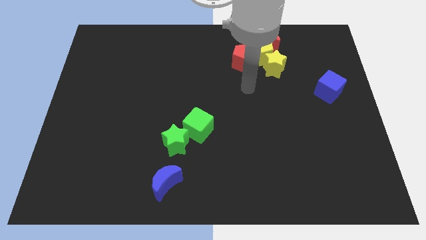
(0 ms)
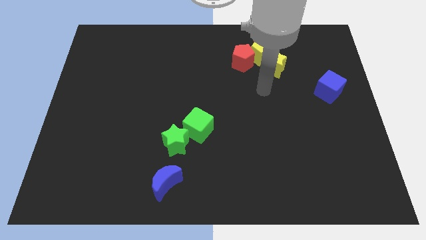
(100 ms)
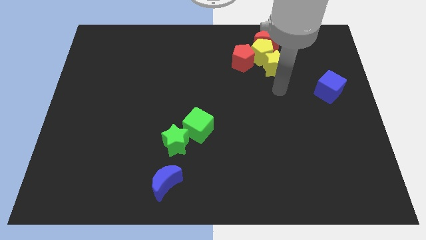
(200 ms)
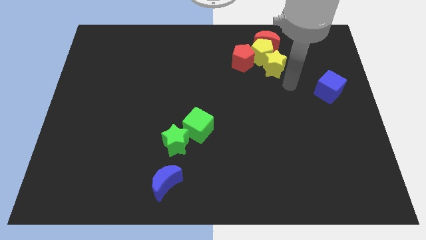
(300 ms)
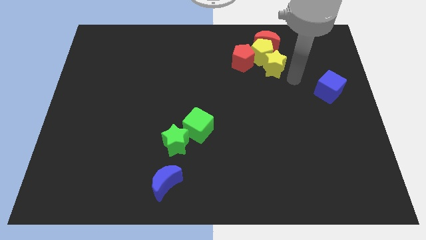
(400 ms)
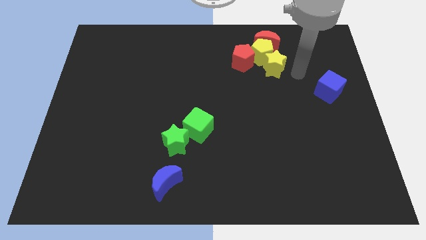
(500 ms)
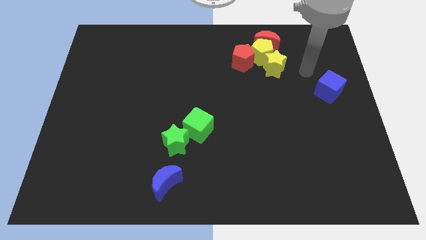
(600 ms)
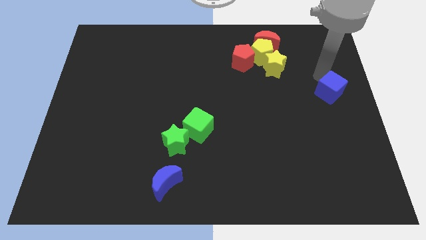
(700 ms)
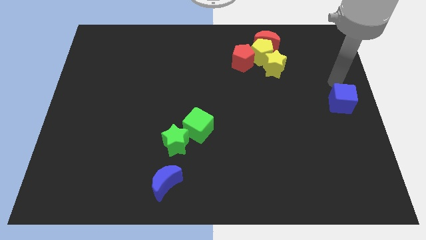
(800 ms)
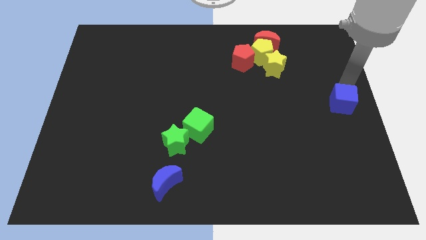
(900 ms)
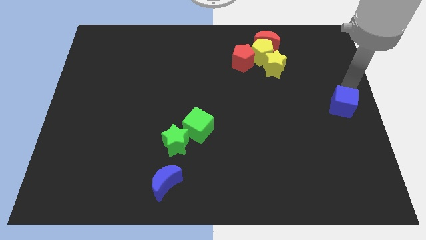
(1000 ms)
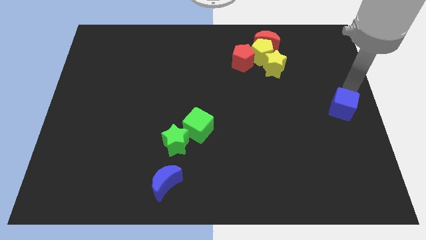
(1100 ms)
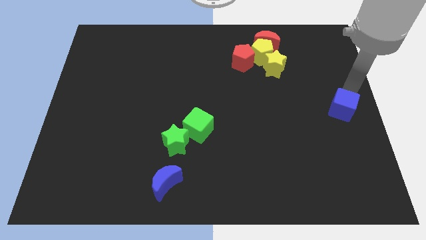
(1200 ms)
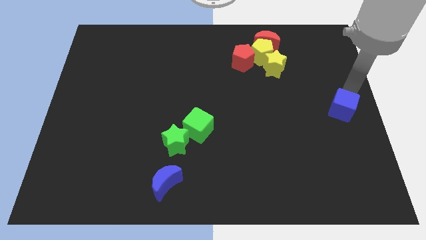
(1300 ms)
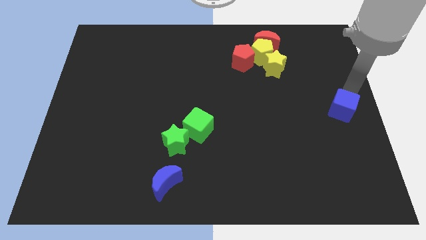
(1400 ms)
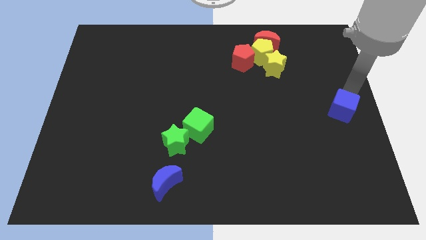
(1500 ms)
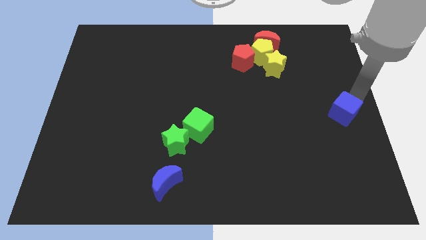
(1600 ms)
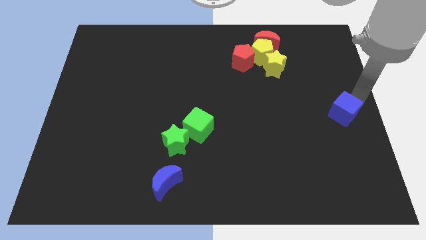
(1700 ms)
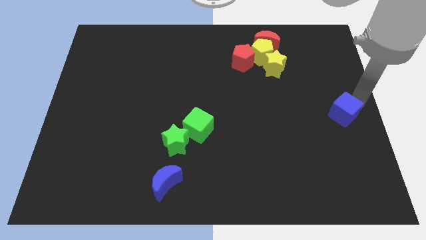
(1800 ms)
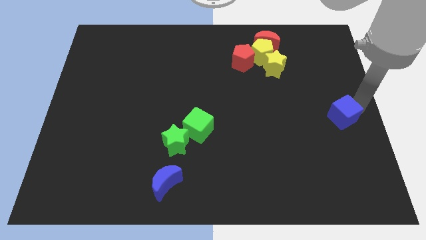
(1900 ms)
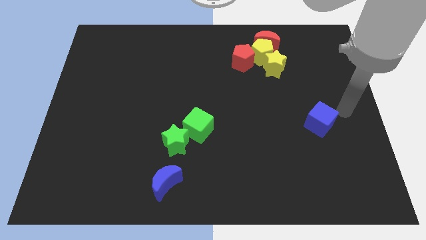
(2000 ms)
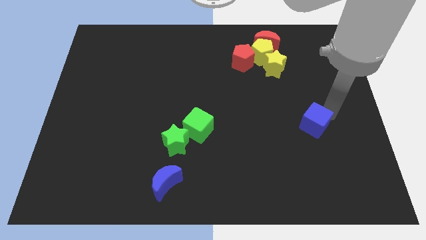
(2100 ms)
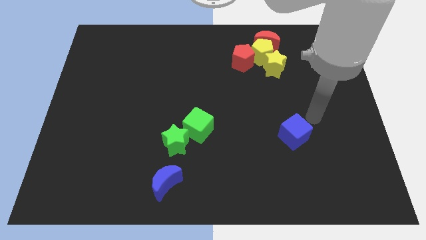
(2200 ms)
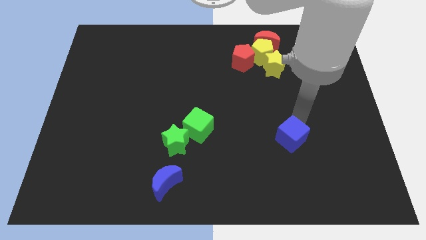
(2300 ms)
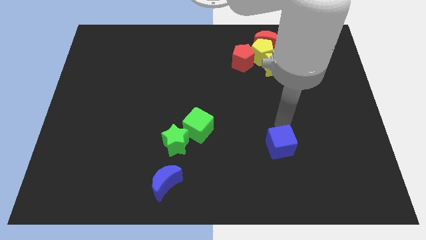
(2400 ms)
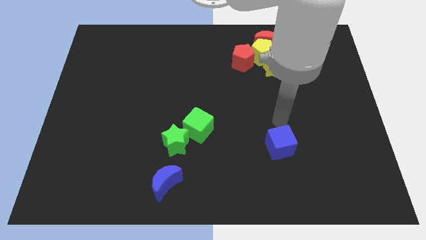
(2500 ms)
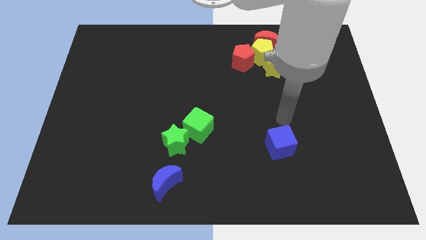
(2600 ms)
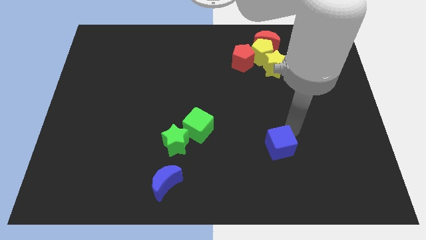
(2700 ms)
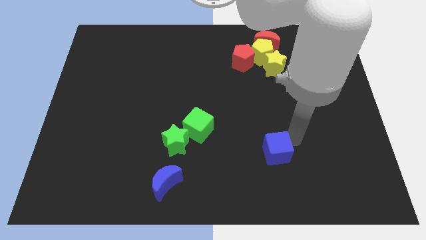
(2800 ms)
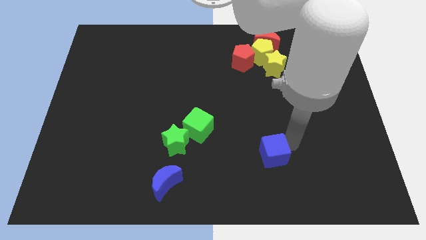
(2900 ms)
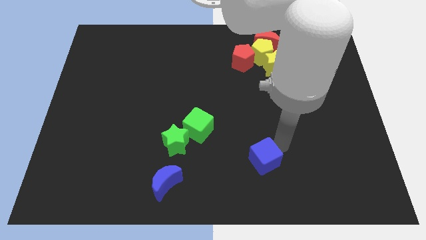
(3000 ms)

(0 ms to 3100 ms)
move blue cube slightly towards the bottom center of the board

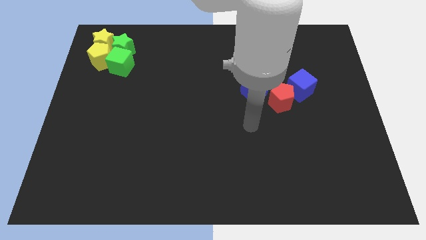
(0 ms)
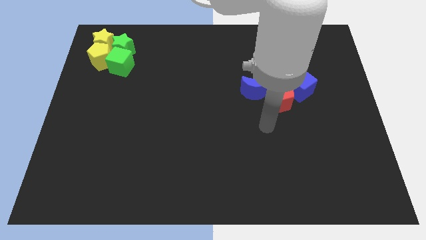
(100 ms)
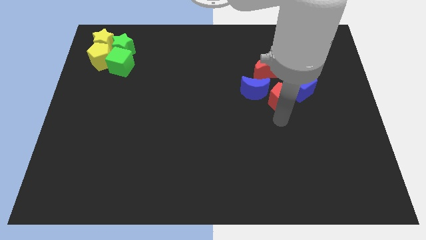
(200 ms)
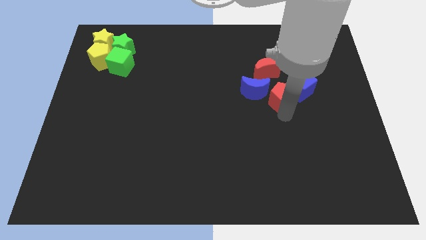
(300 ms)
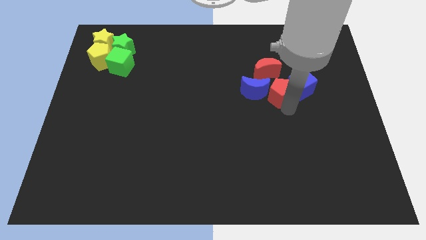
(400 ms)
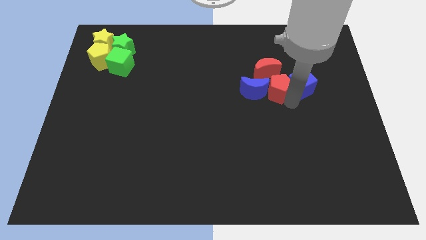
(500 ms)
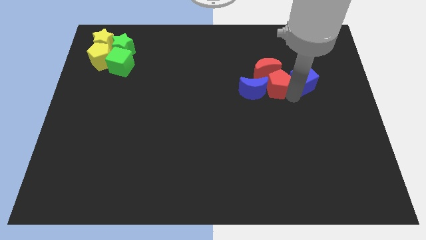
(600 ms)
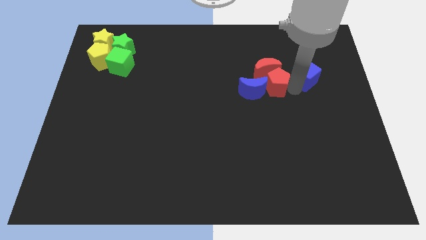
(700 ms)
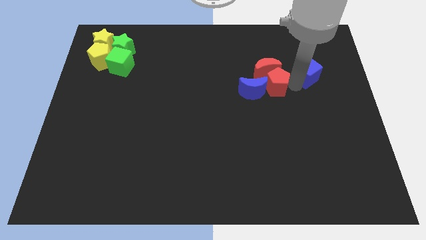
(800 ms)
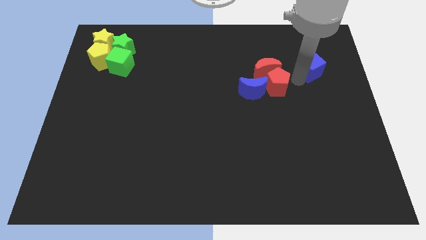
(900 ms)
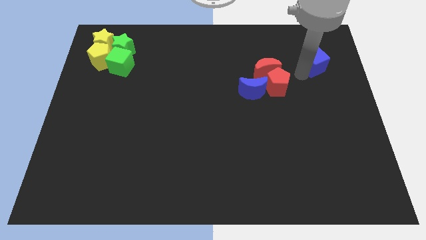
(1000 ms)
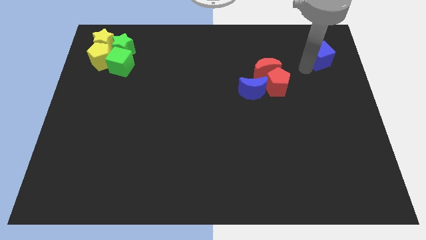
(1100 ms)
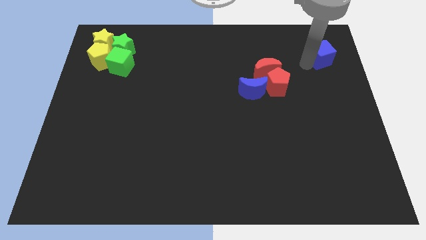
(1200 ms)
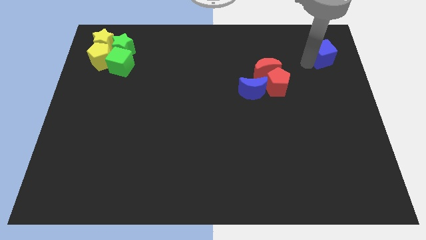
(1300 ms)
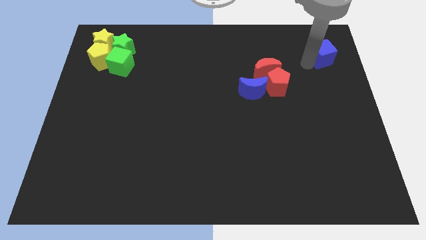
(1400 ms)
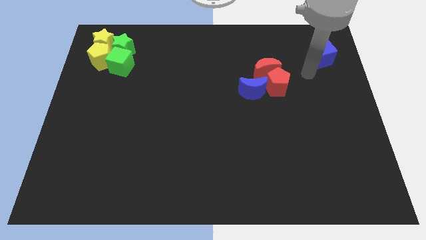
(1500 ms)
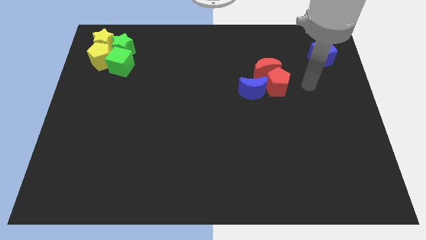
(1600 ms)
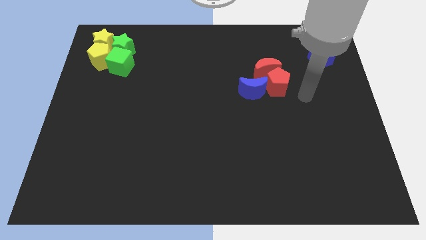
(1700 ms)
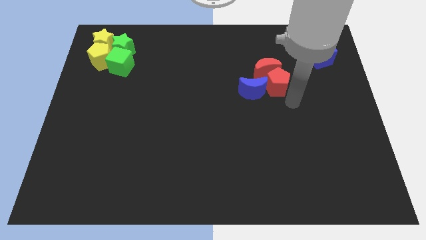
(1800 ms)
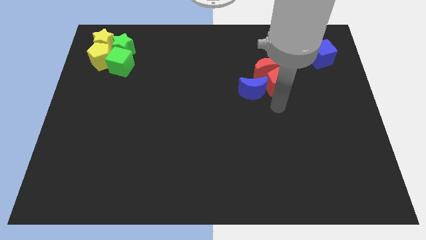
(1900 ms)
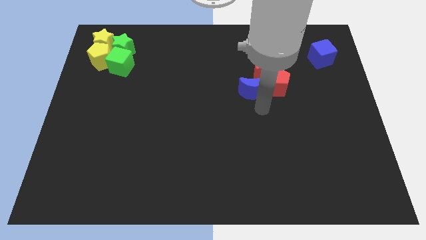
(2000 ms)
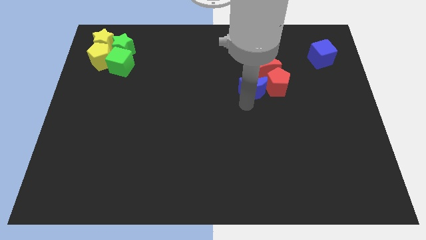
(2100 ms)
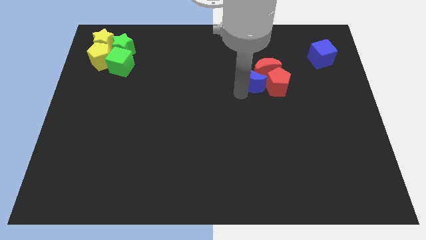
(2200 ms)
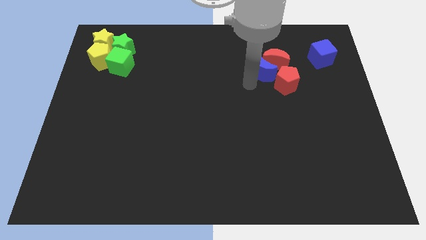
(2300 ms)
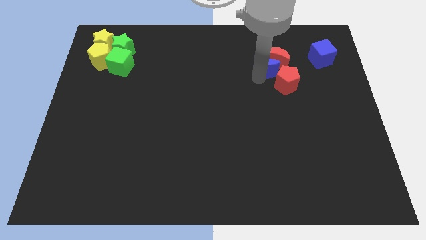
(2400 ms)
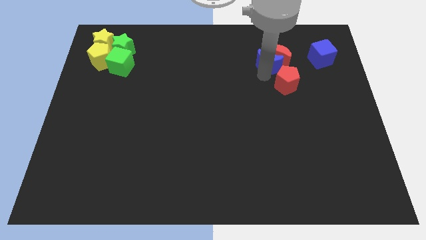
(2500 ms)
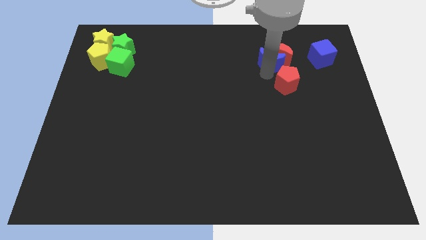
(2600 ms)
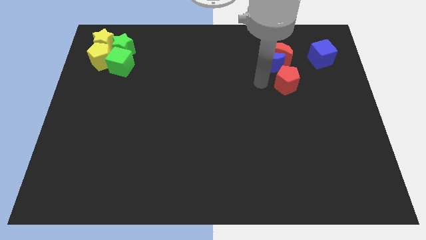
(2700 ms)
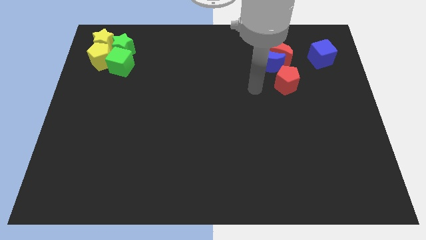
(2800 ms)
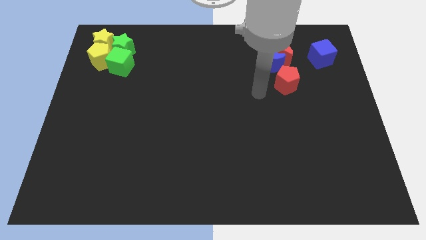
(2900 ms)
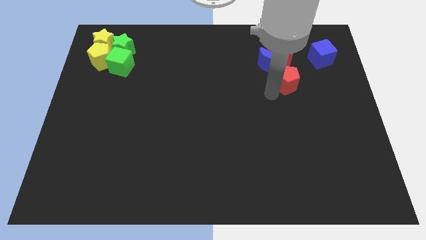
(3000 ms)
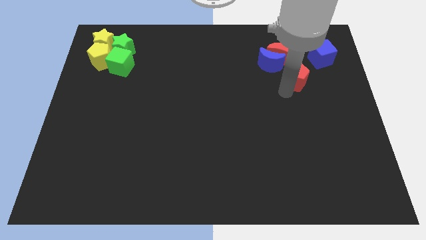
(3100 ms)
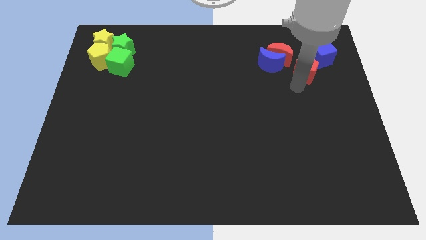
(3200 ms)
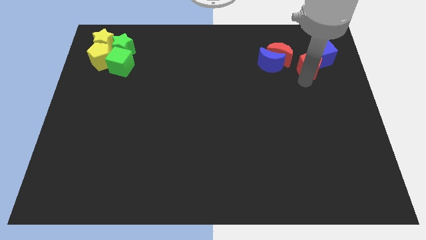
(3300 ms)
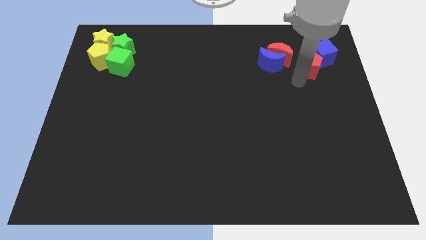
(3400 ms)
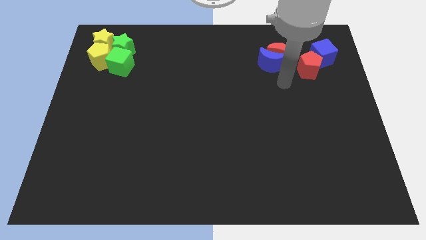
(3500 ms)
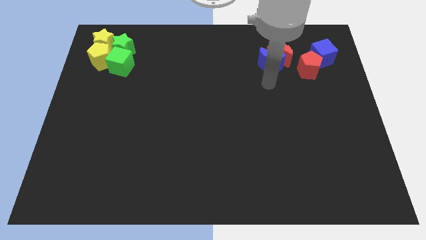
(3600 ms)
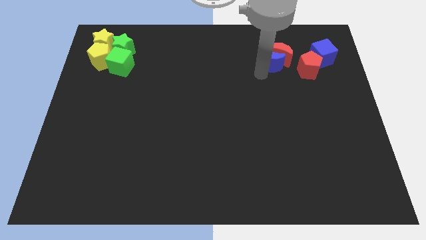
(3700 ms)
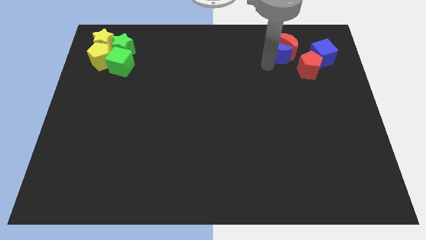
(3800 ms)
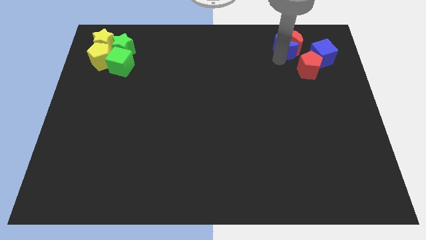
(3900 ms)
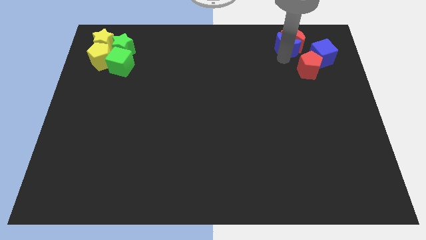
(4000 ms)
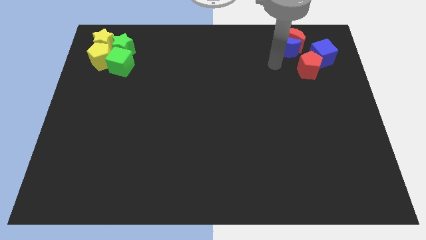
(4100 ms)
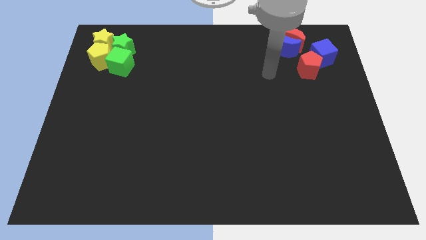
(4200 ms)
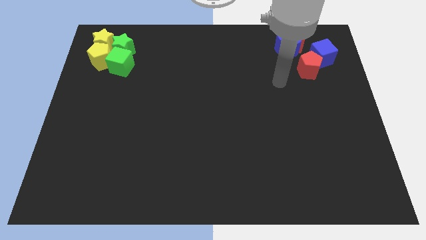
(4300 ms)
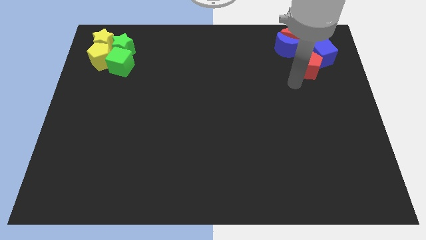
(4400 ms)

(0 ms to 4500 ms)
move blue and red blocks to the top right corner of the board

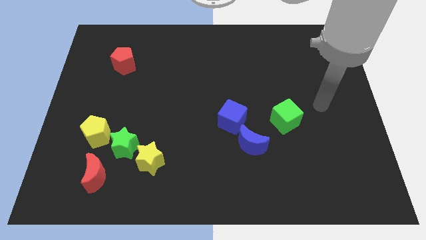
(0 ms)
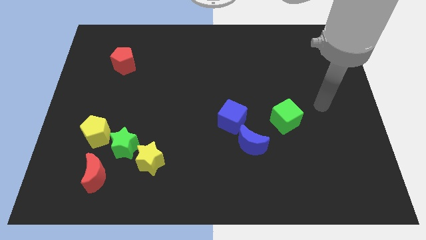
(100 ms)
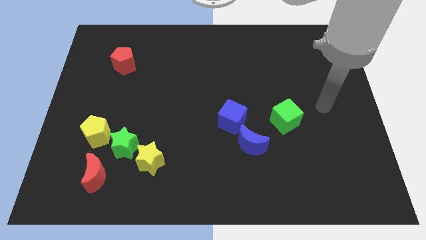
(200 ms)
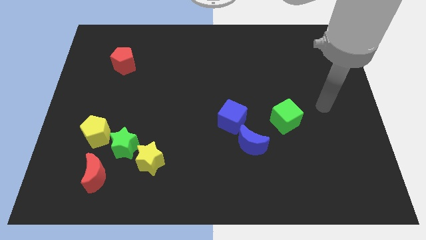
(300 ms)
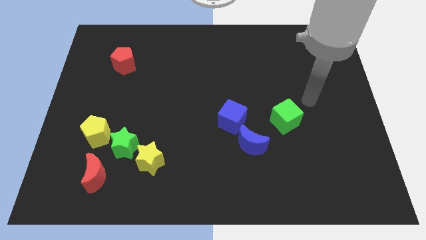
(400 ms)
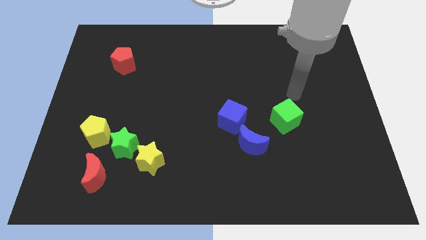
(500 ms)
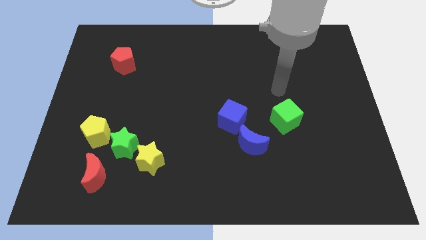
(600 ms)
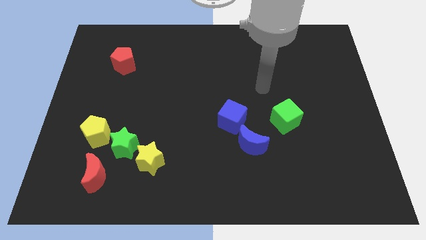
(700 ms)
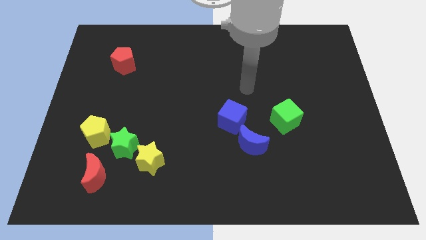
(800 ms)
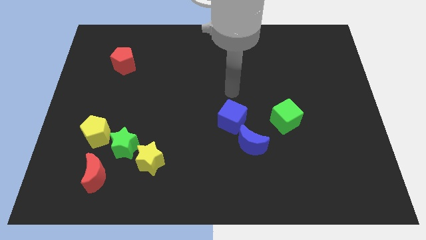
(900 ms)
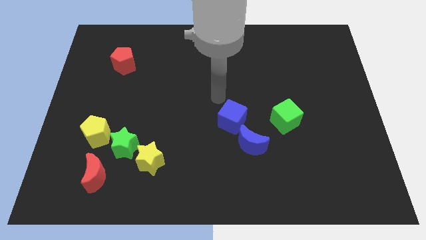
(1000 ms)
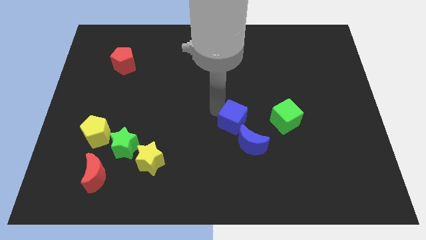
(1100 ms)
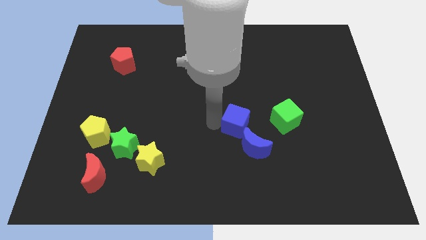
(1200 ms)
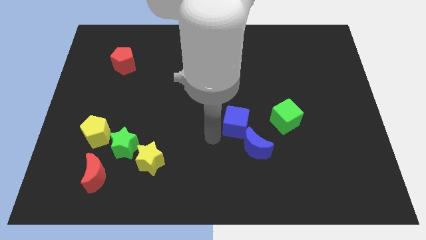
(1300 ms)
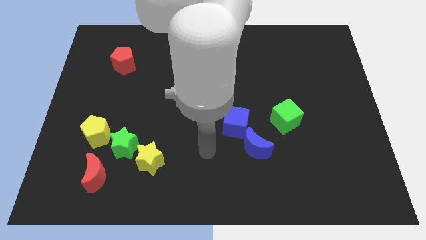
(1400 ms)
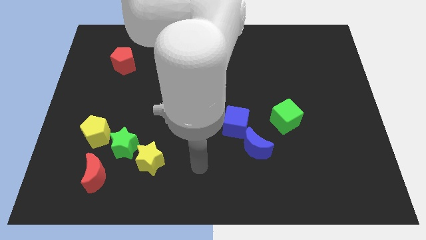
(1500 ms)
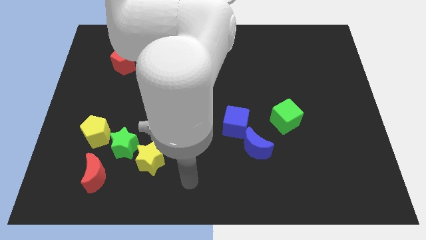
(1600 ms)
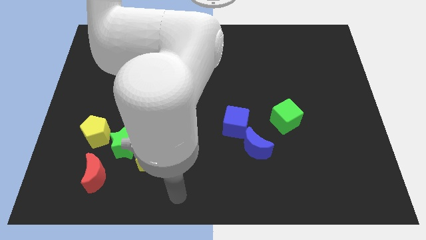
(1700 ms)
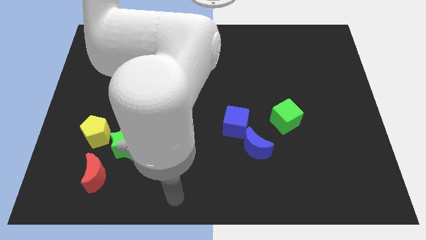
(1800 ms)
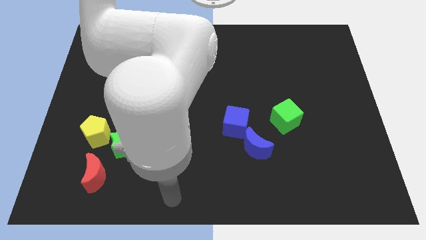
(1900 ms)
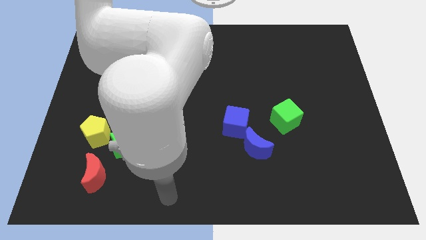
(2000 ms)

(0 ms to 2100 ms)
slightly push the blue cube to the right of the board
